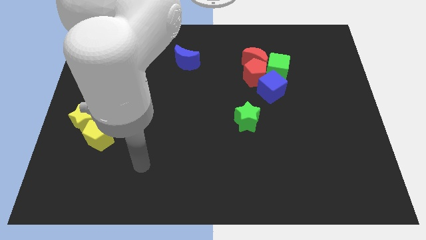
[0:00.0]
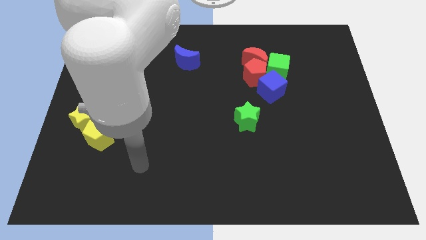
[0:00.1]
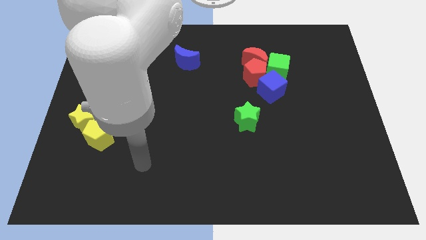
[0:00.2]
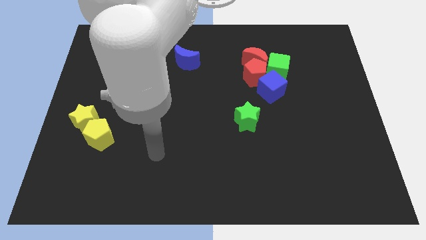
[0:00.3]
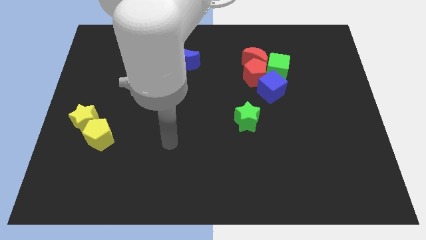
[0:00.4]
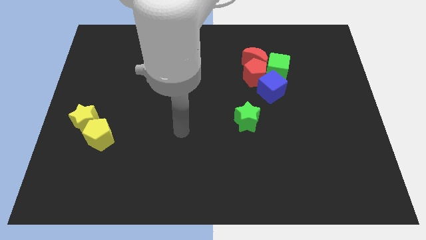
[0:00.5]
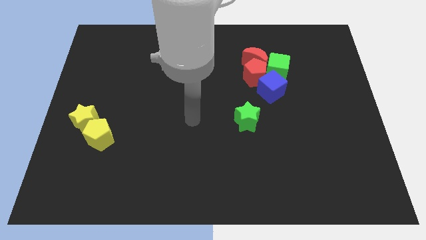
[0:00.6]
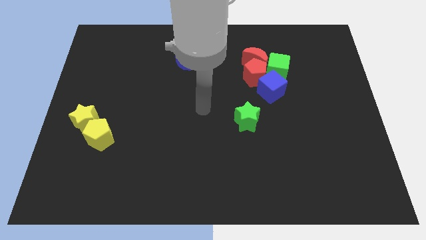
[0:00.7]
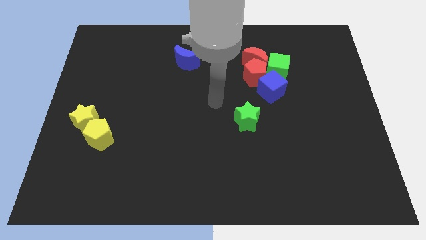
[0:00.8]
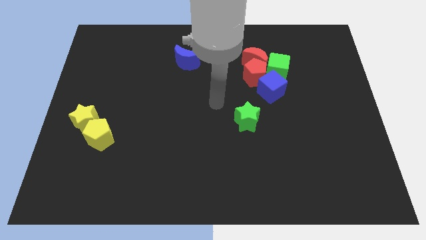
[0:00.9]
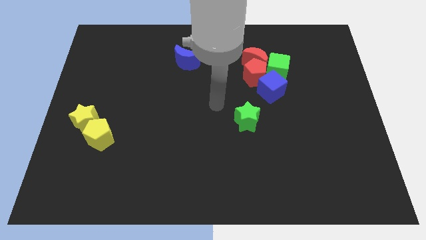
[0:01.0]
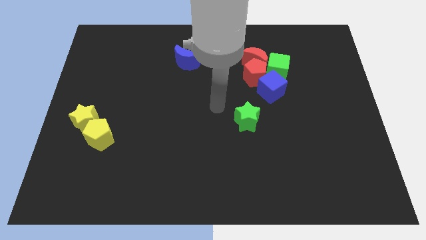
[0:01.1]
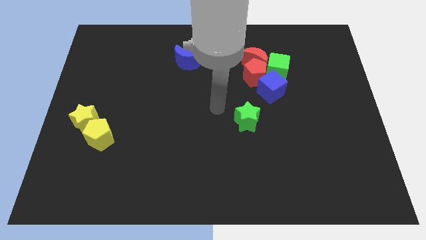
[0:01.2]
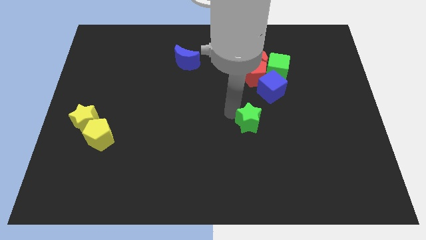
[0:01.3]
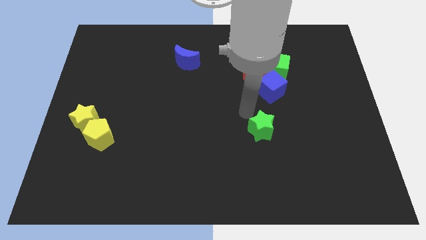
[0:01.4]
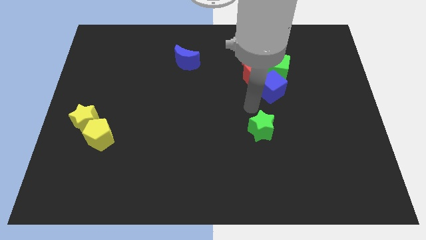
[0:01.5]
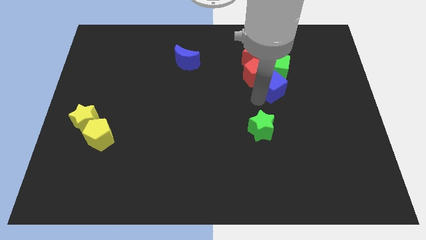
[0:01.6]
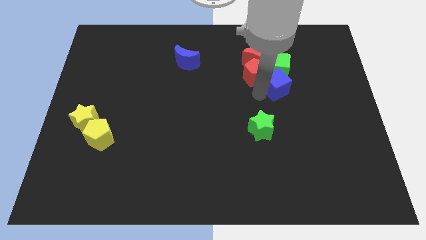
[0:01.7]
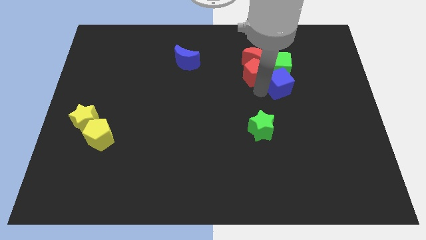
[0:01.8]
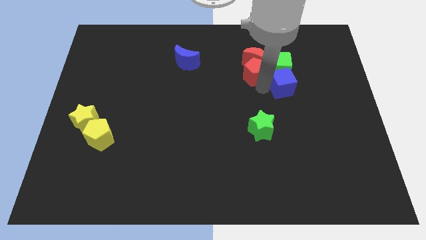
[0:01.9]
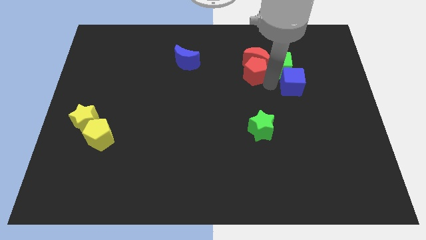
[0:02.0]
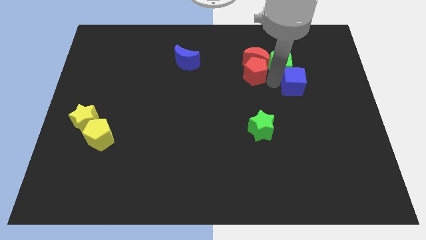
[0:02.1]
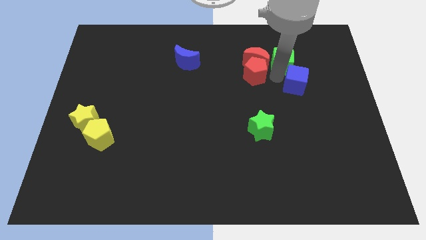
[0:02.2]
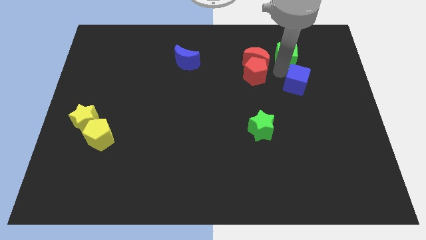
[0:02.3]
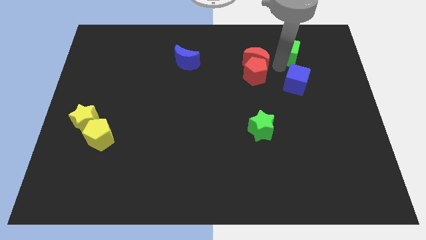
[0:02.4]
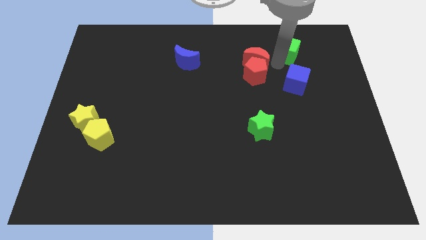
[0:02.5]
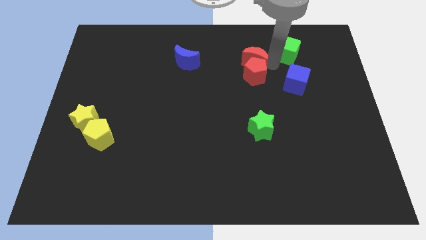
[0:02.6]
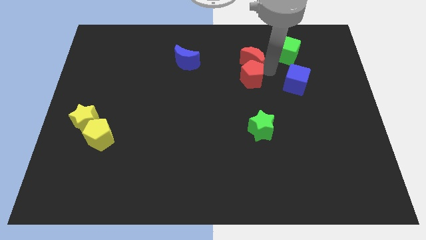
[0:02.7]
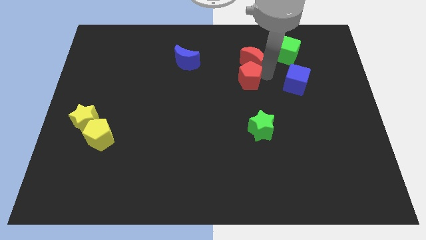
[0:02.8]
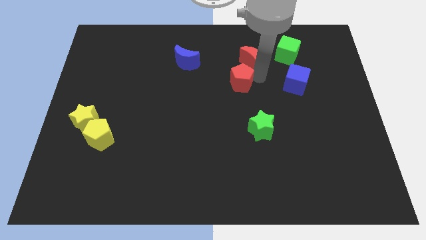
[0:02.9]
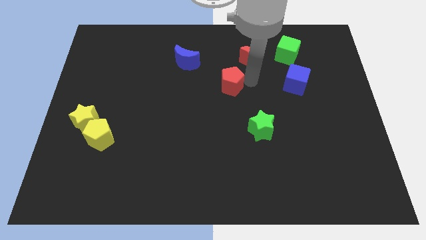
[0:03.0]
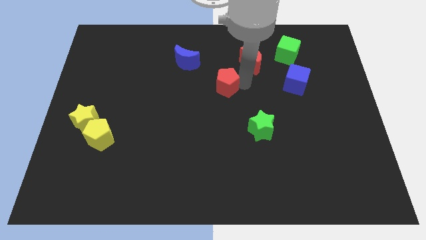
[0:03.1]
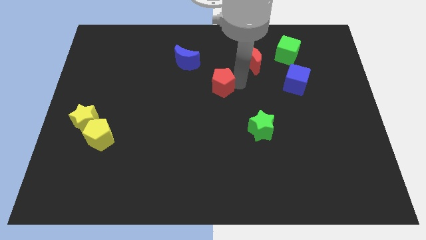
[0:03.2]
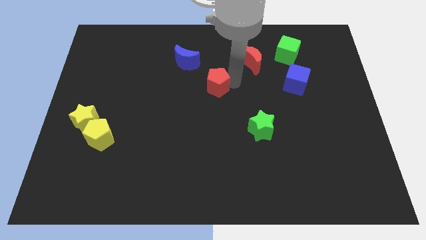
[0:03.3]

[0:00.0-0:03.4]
separate the group of blocks

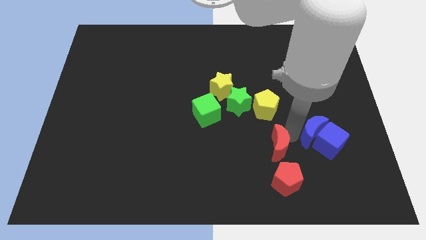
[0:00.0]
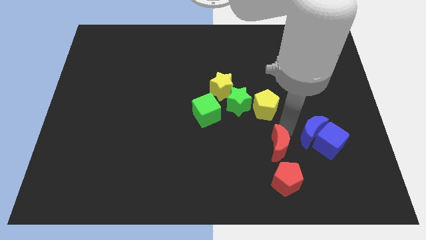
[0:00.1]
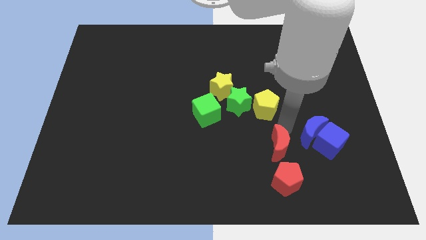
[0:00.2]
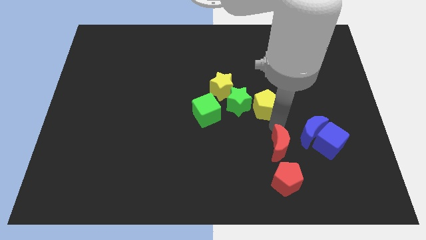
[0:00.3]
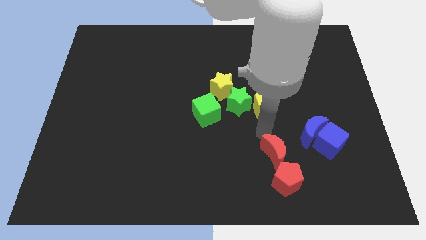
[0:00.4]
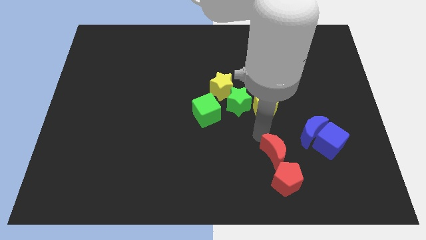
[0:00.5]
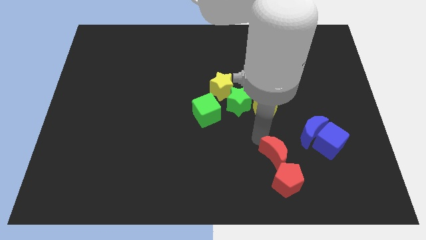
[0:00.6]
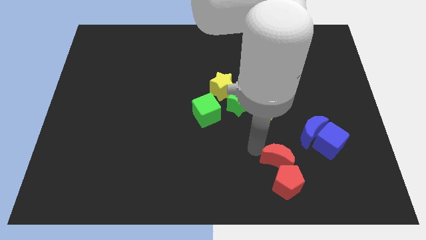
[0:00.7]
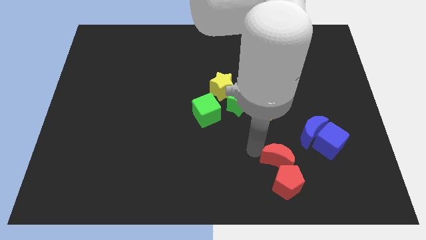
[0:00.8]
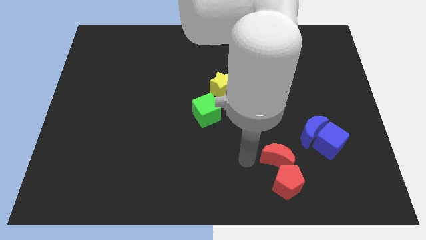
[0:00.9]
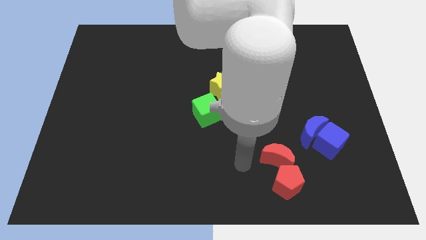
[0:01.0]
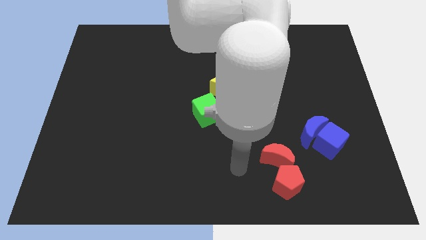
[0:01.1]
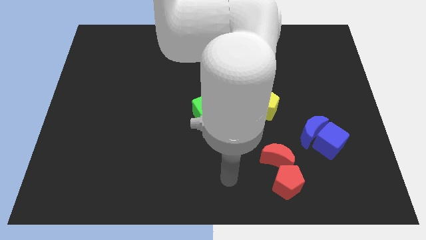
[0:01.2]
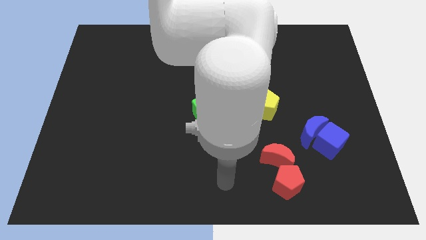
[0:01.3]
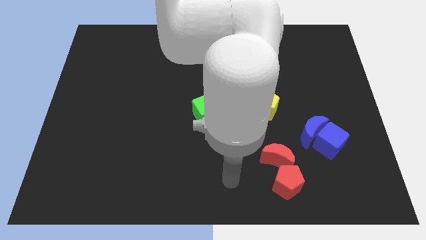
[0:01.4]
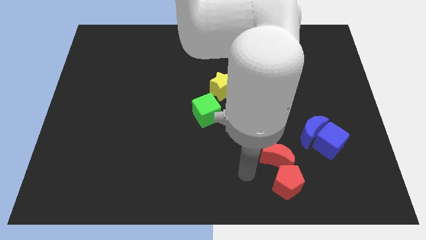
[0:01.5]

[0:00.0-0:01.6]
push the red crescent towards the red pentagon

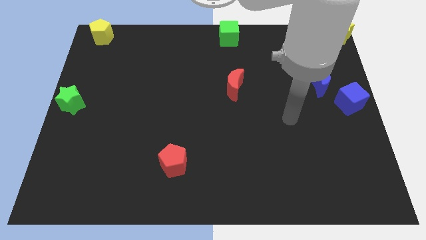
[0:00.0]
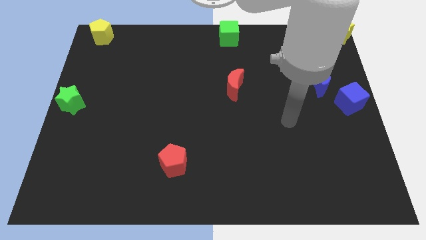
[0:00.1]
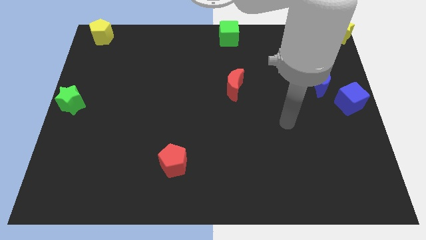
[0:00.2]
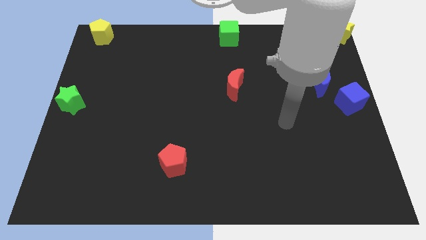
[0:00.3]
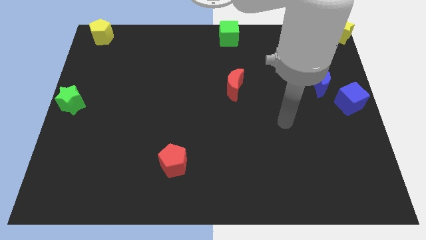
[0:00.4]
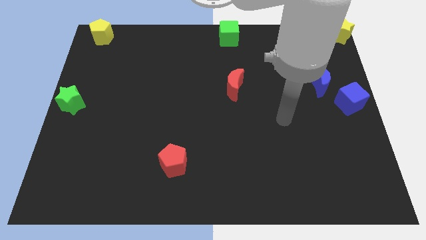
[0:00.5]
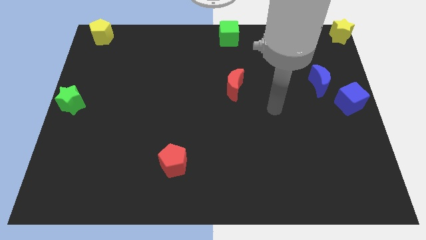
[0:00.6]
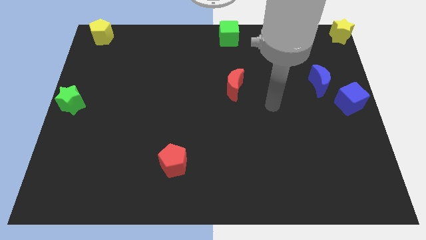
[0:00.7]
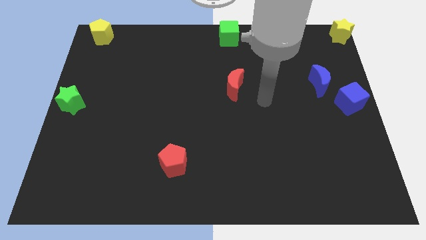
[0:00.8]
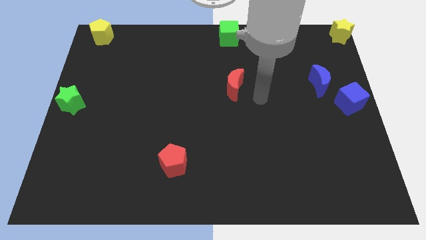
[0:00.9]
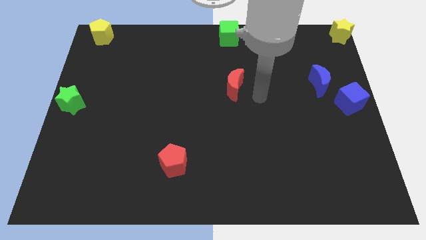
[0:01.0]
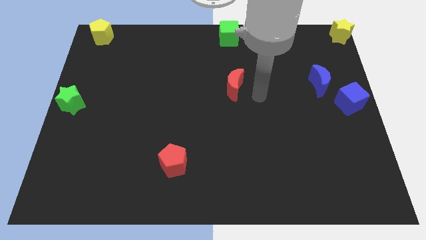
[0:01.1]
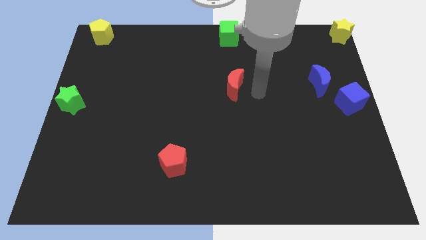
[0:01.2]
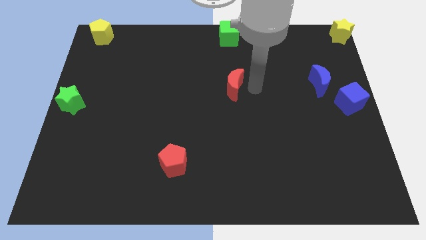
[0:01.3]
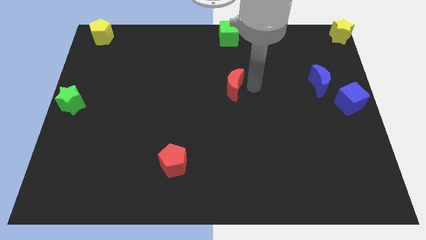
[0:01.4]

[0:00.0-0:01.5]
move your arm right to the red crescent

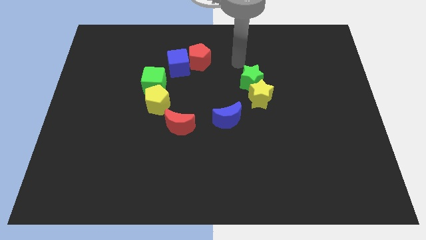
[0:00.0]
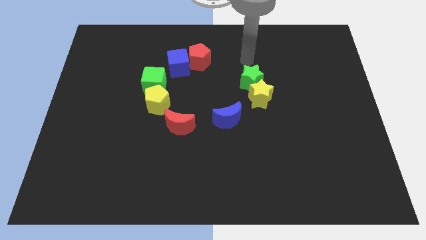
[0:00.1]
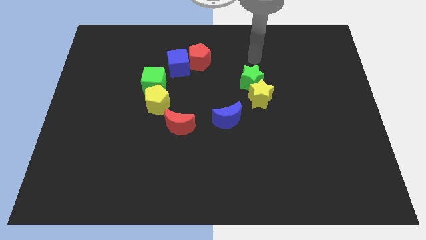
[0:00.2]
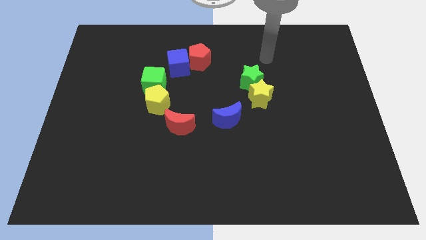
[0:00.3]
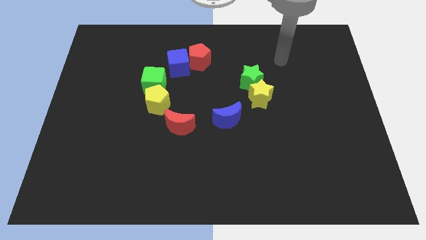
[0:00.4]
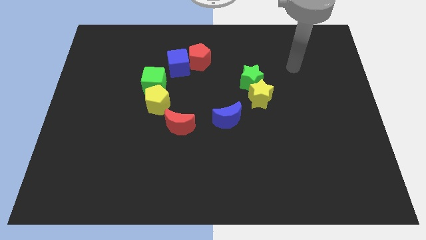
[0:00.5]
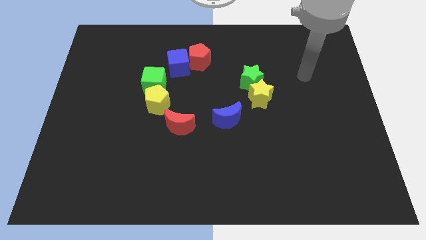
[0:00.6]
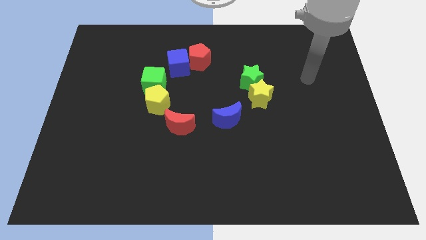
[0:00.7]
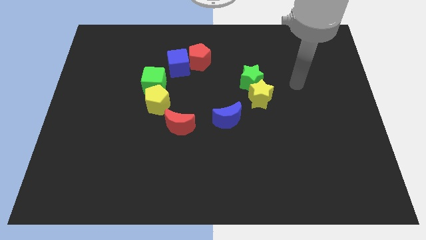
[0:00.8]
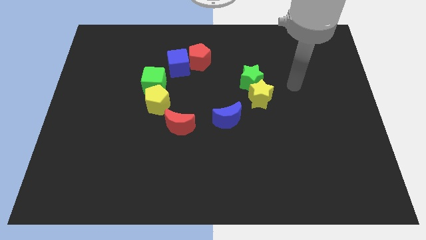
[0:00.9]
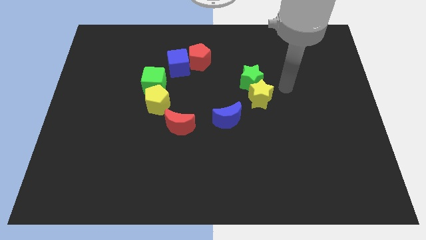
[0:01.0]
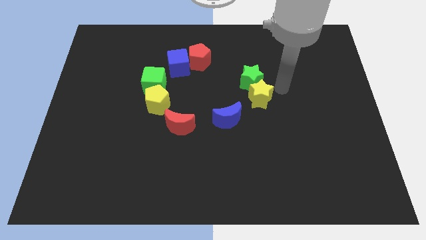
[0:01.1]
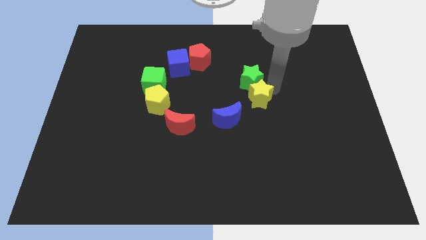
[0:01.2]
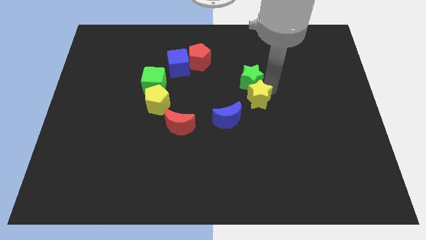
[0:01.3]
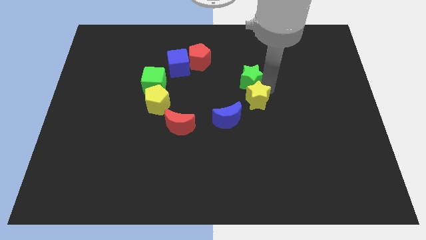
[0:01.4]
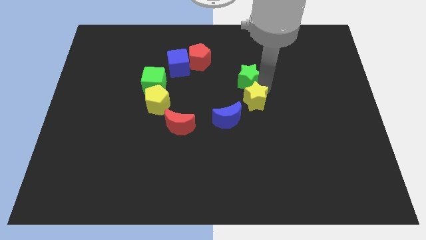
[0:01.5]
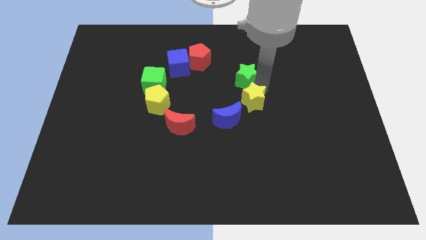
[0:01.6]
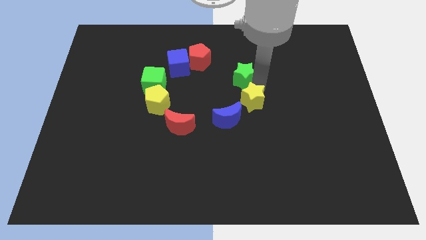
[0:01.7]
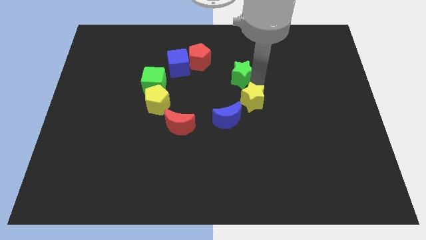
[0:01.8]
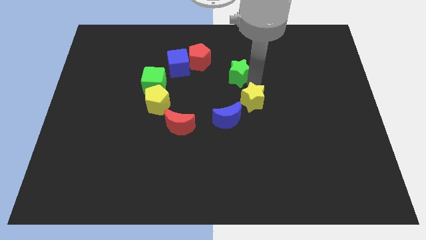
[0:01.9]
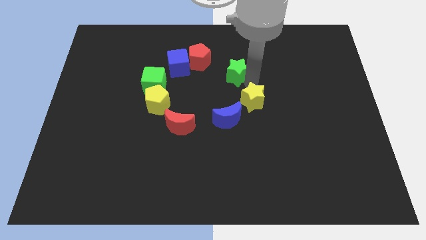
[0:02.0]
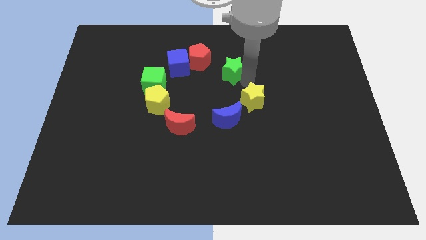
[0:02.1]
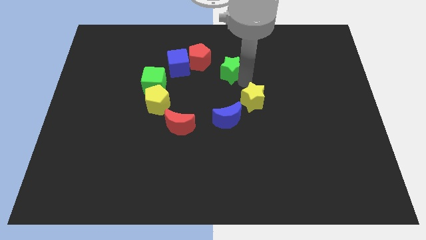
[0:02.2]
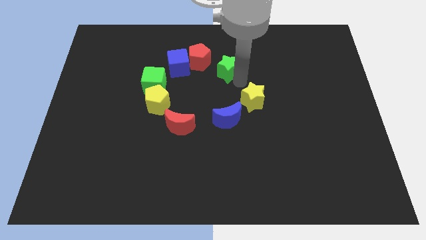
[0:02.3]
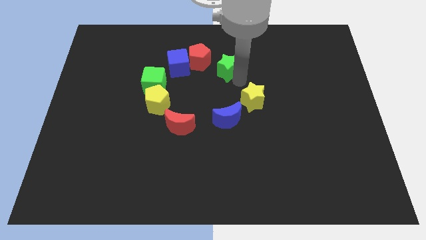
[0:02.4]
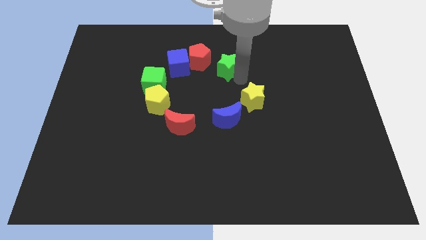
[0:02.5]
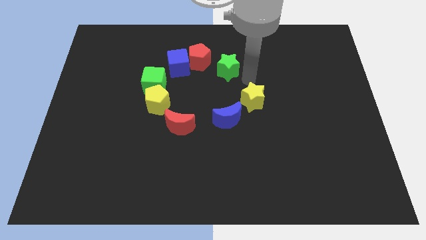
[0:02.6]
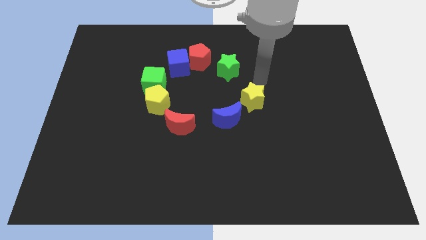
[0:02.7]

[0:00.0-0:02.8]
take the green star away from the yellow star
